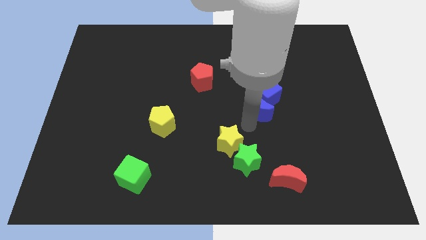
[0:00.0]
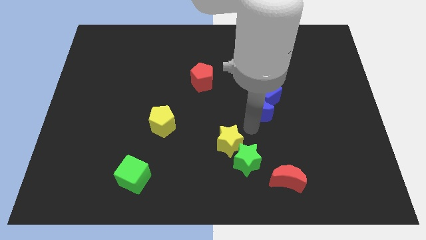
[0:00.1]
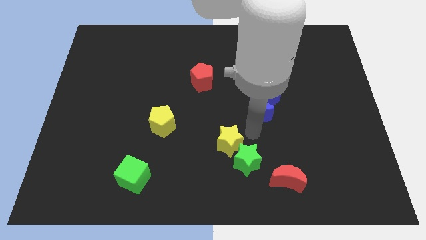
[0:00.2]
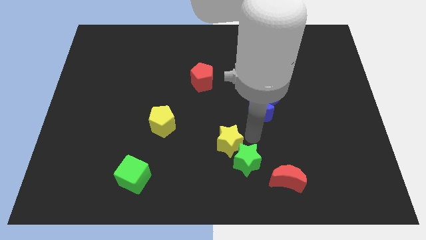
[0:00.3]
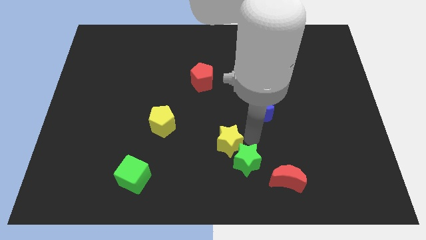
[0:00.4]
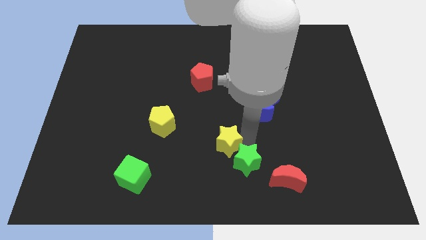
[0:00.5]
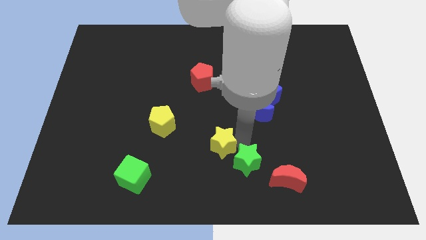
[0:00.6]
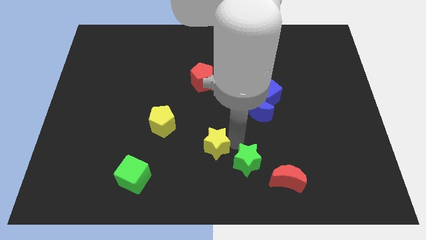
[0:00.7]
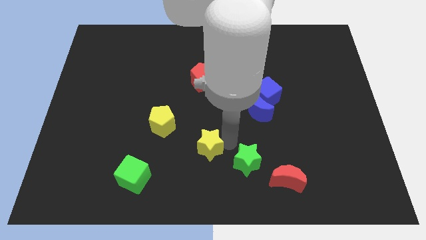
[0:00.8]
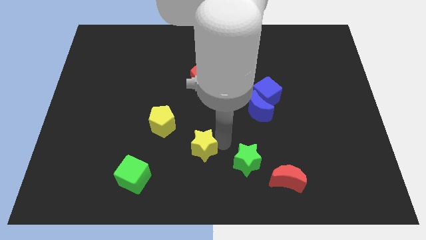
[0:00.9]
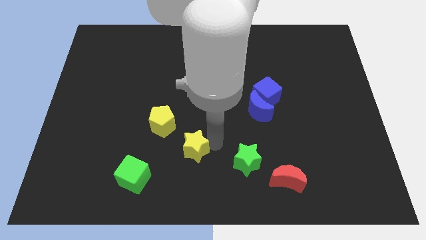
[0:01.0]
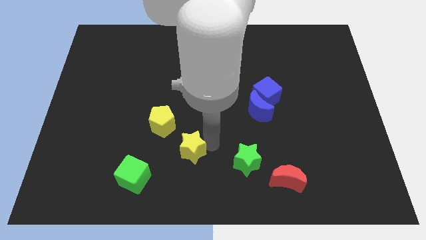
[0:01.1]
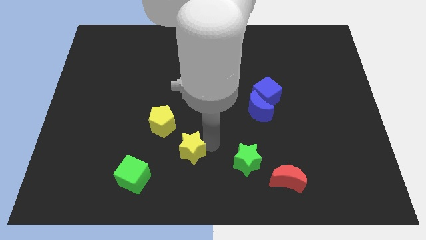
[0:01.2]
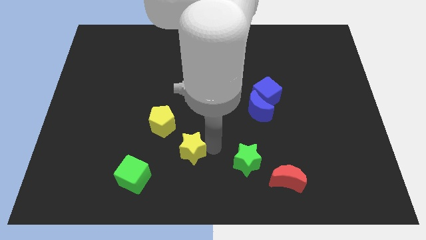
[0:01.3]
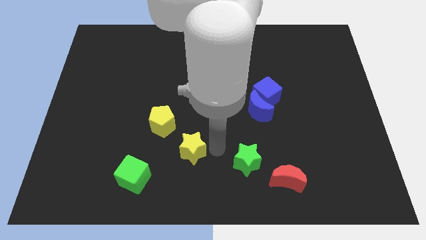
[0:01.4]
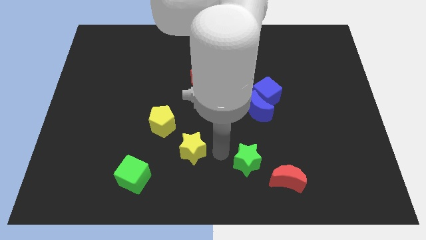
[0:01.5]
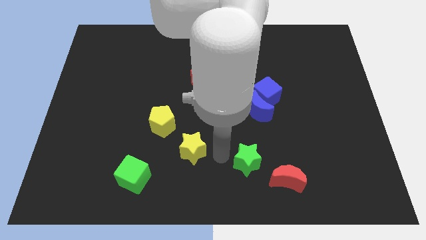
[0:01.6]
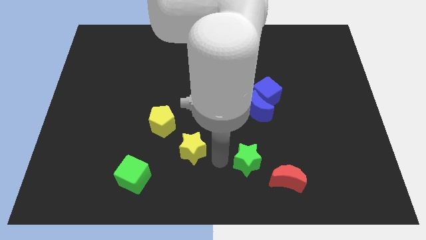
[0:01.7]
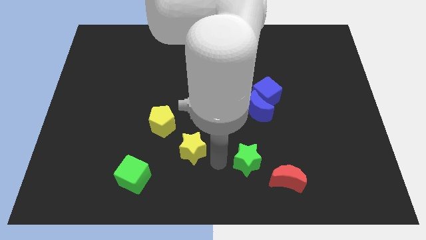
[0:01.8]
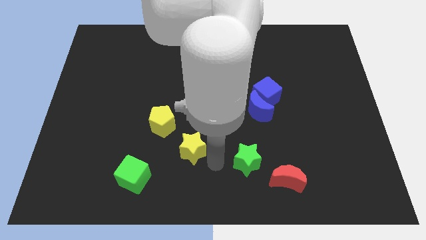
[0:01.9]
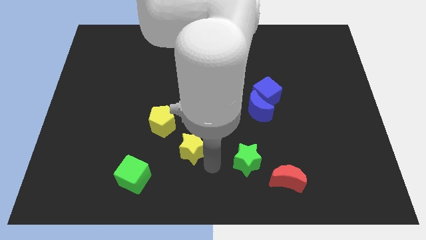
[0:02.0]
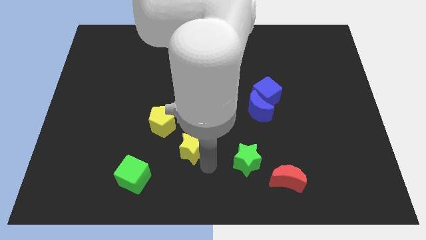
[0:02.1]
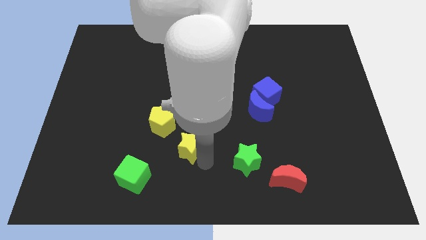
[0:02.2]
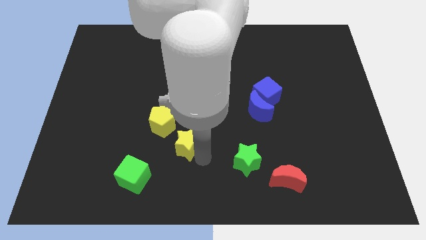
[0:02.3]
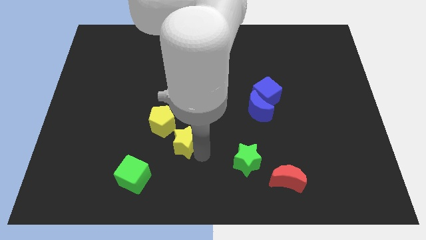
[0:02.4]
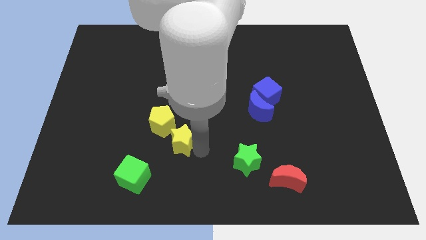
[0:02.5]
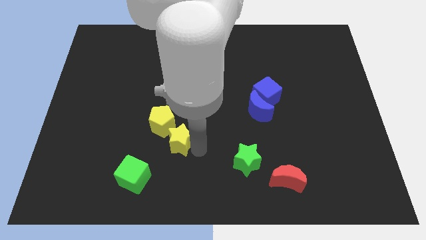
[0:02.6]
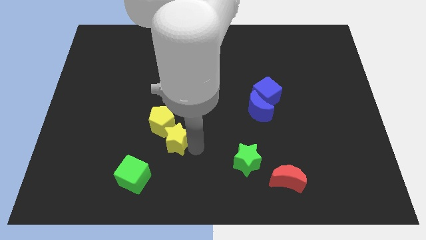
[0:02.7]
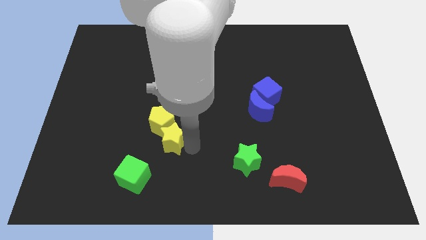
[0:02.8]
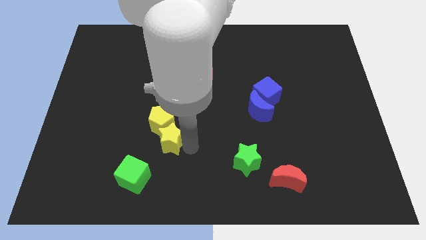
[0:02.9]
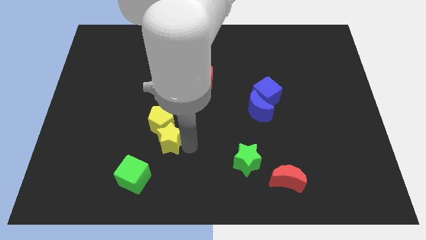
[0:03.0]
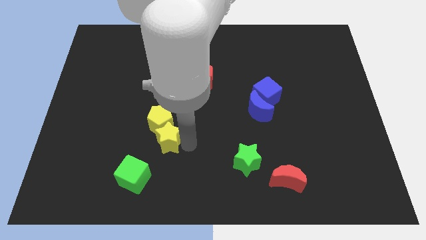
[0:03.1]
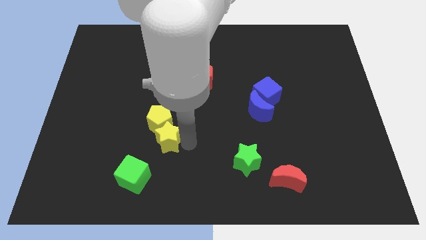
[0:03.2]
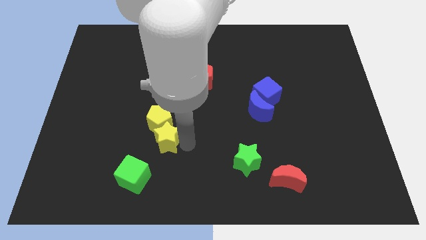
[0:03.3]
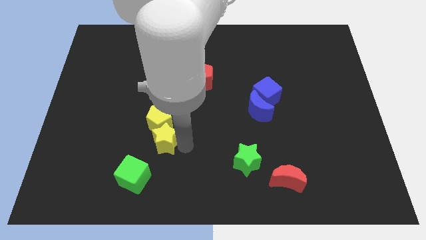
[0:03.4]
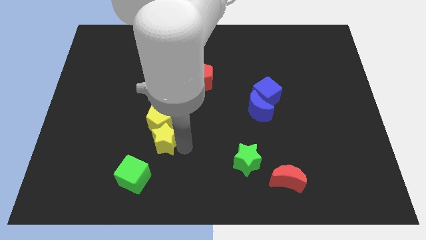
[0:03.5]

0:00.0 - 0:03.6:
move the yellow star into the yellow pentagon

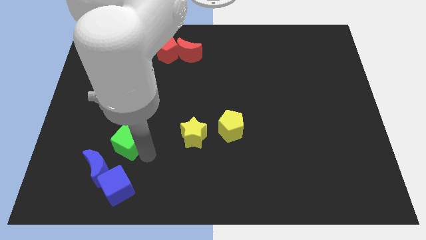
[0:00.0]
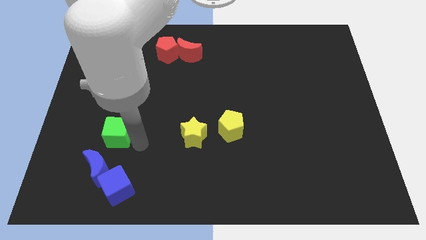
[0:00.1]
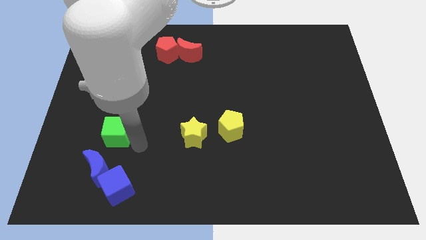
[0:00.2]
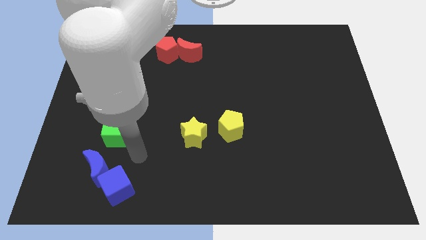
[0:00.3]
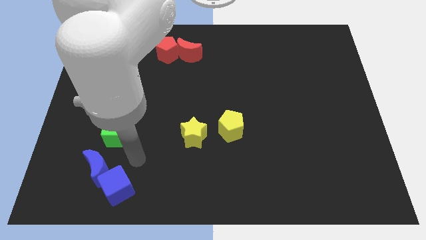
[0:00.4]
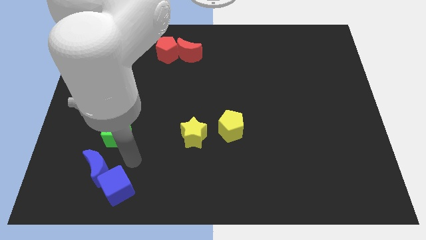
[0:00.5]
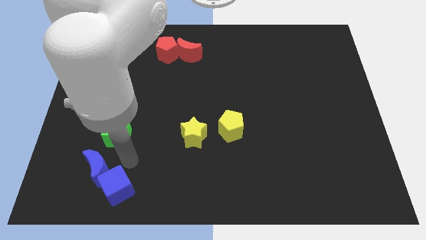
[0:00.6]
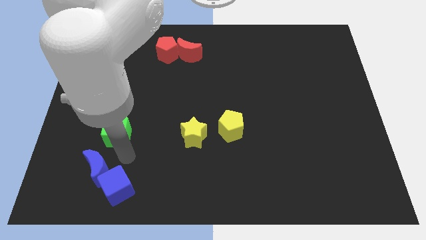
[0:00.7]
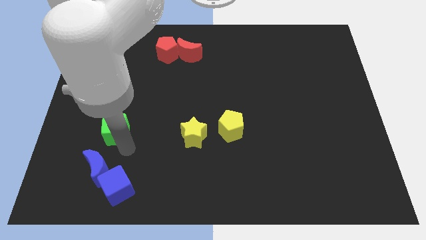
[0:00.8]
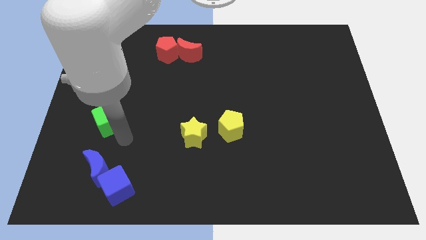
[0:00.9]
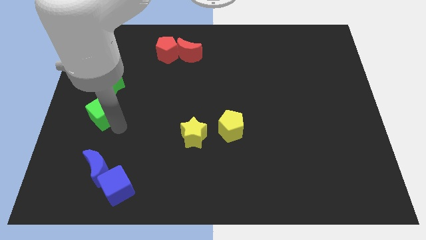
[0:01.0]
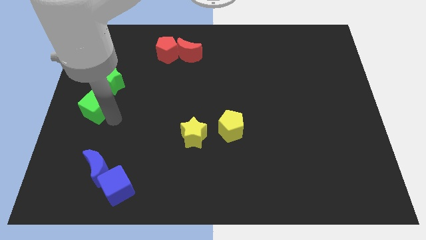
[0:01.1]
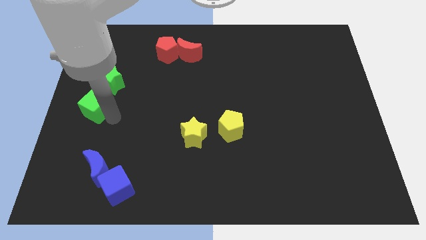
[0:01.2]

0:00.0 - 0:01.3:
place the green cube above the blue moon

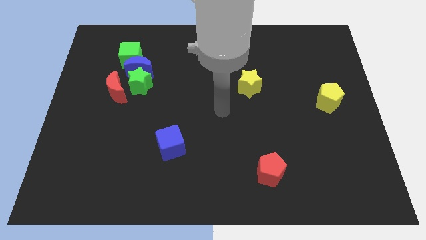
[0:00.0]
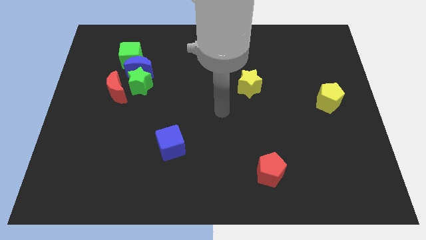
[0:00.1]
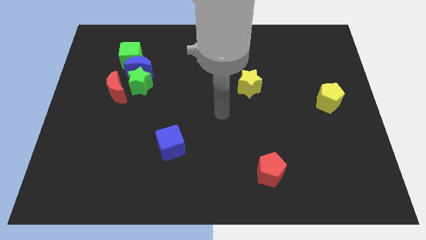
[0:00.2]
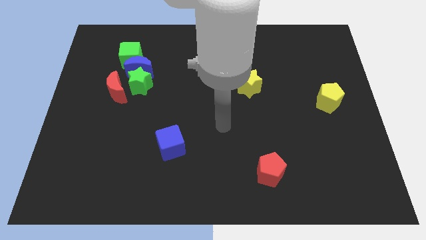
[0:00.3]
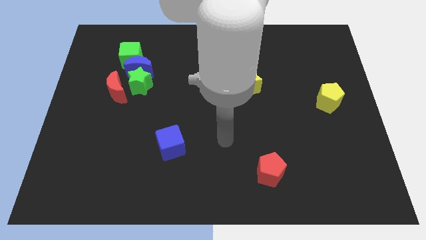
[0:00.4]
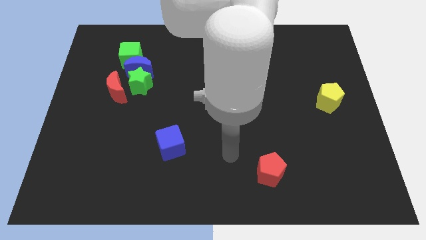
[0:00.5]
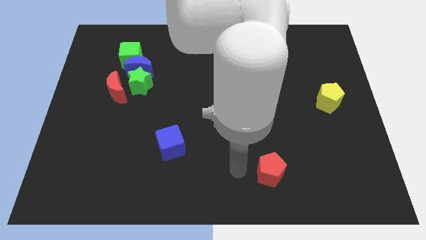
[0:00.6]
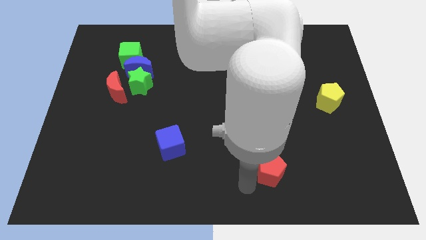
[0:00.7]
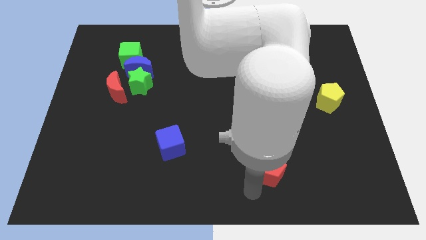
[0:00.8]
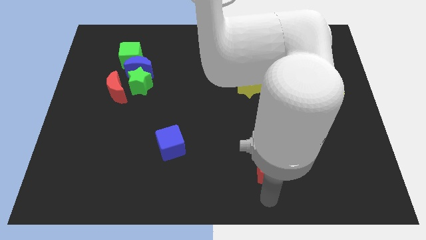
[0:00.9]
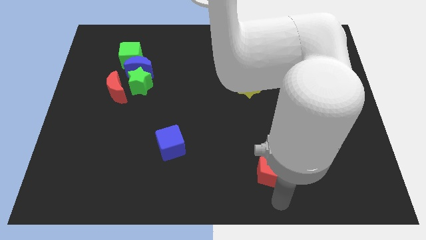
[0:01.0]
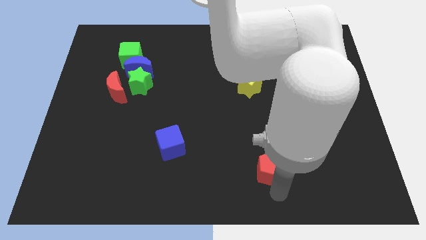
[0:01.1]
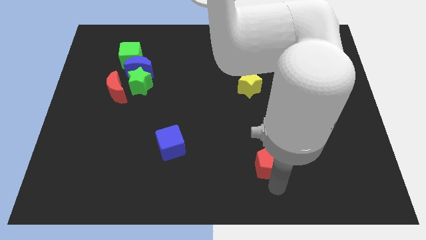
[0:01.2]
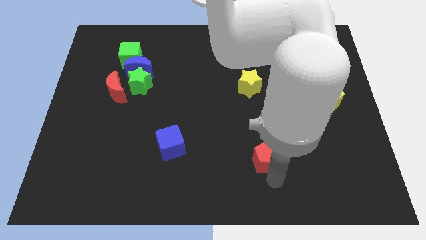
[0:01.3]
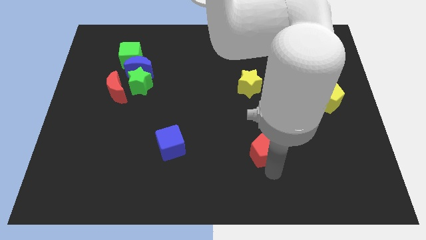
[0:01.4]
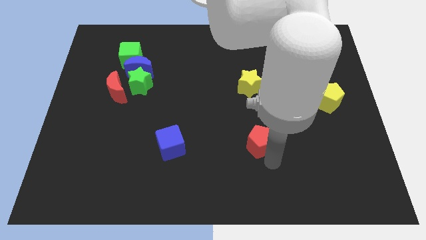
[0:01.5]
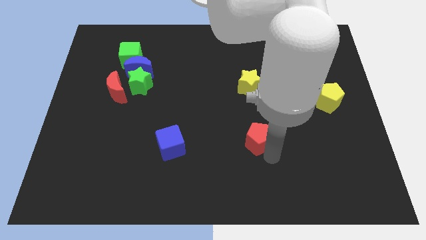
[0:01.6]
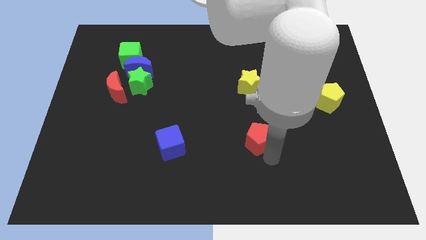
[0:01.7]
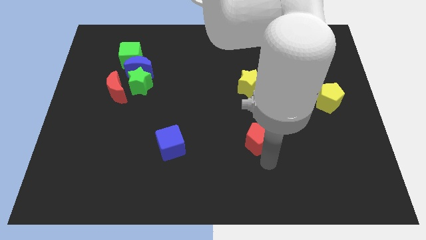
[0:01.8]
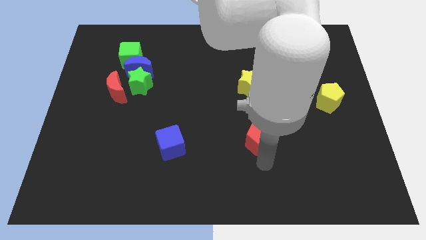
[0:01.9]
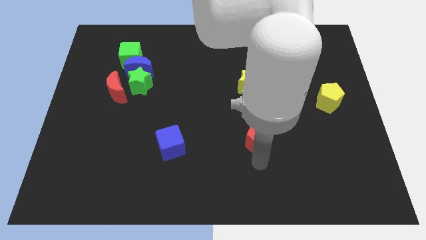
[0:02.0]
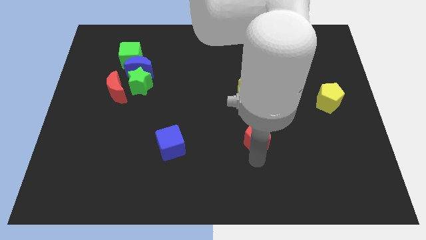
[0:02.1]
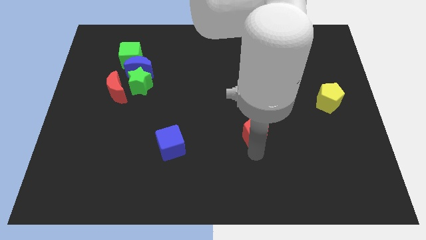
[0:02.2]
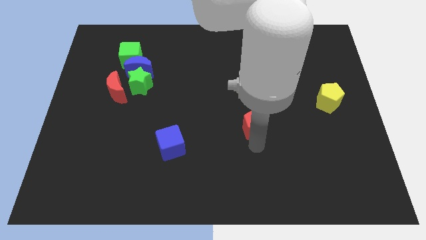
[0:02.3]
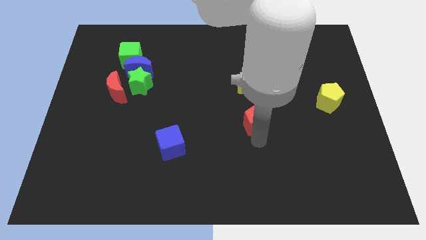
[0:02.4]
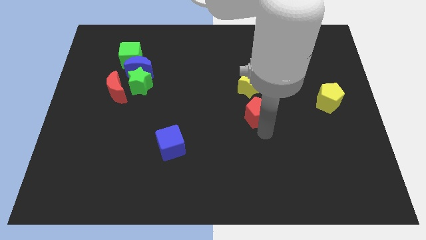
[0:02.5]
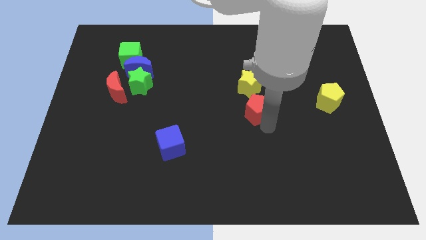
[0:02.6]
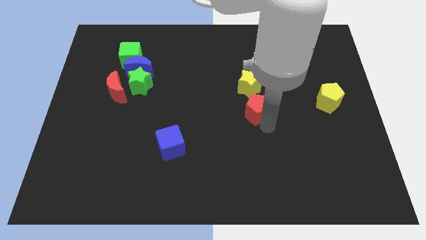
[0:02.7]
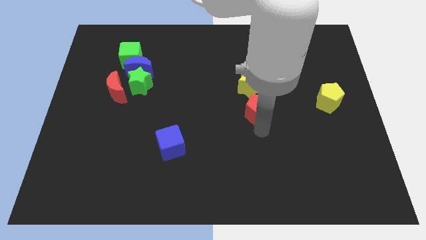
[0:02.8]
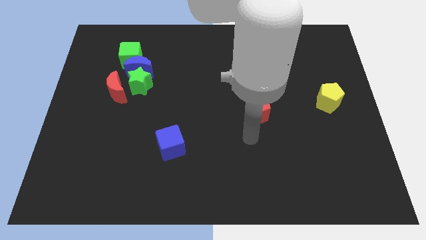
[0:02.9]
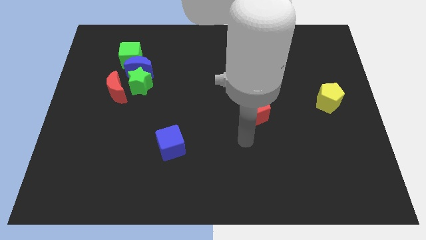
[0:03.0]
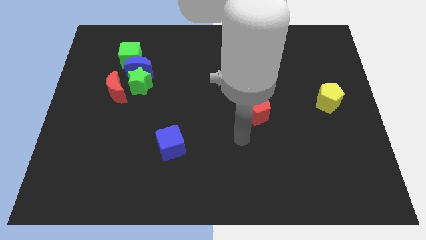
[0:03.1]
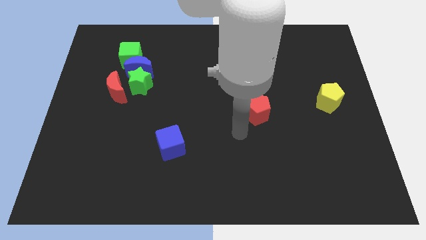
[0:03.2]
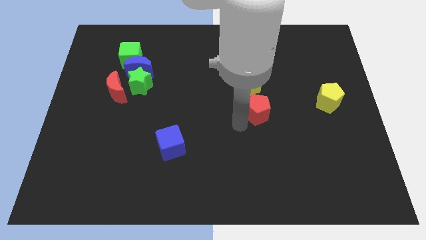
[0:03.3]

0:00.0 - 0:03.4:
move the red pentagon below the yellow star

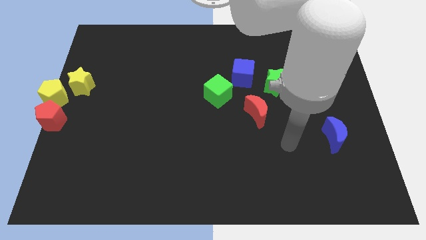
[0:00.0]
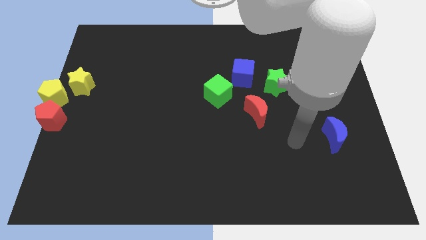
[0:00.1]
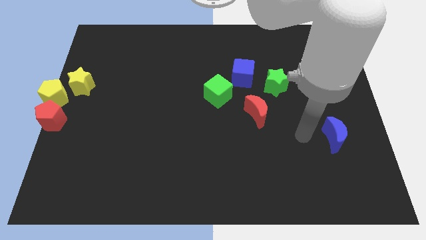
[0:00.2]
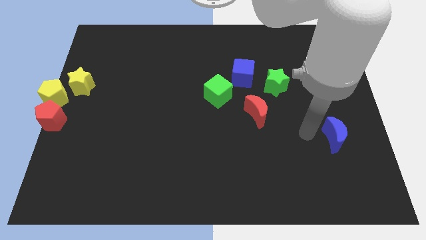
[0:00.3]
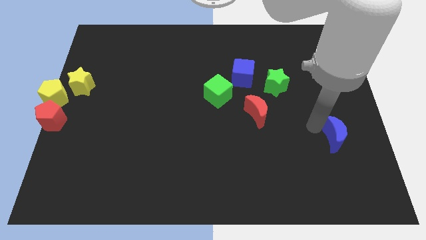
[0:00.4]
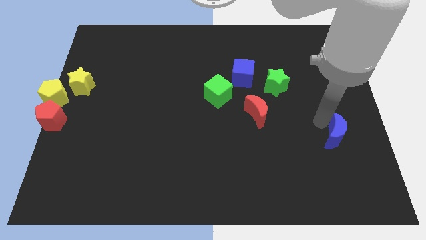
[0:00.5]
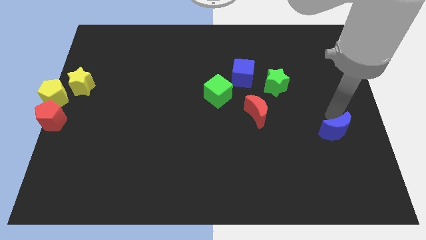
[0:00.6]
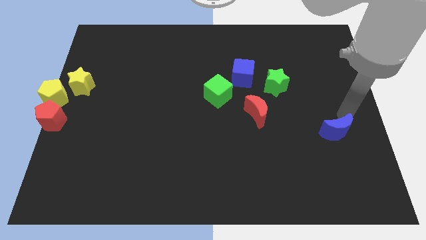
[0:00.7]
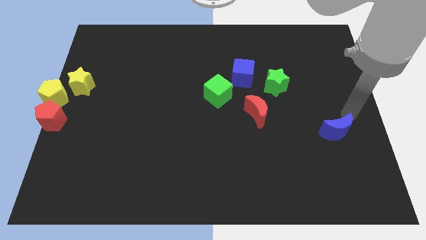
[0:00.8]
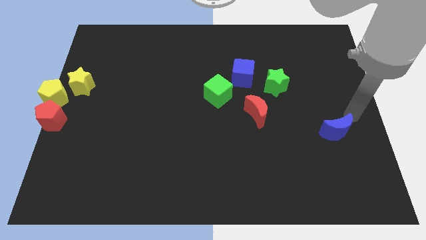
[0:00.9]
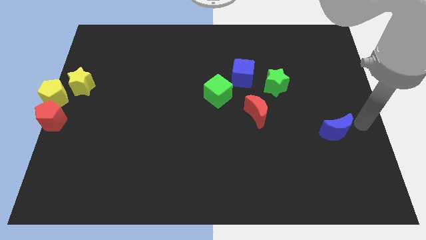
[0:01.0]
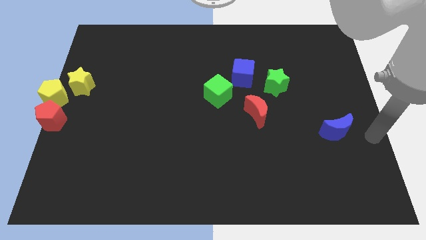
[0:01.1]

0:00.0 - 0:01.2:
slightly push the blue moon towards the right side of the board
